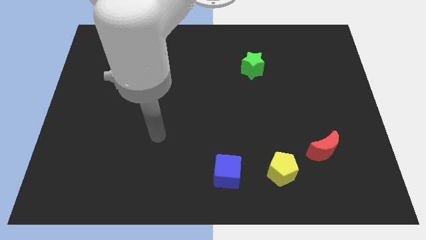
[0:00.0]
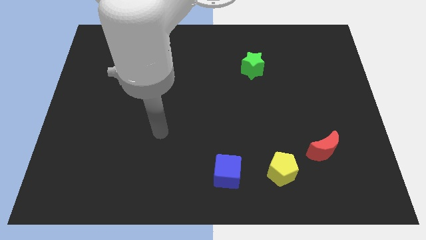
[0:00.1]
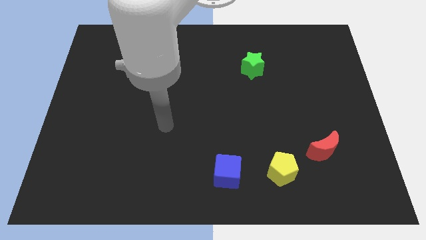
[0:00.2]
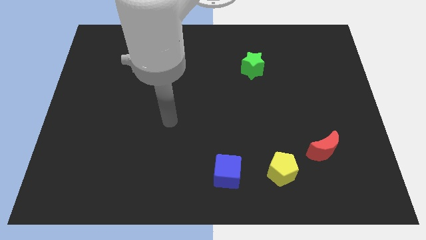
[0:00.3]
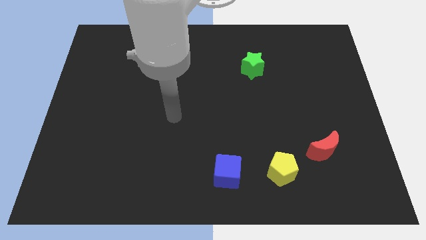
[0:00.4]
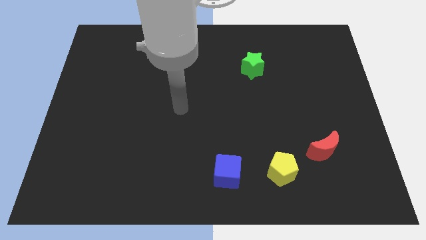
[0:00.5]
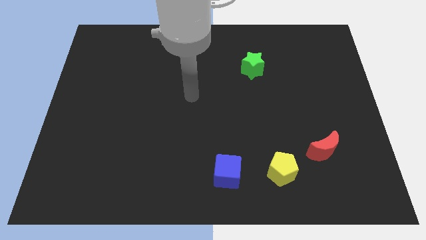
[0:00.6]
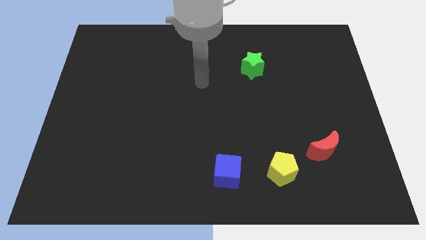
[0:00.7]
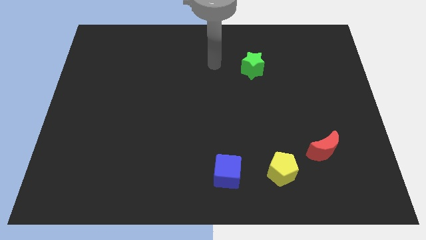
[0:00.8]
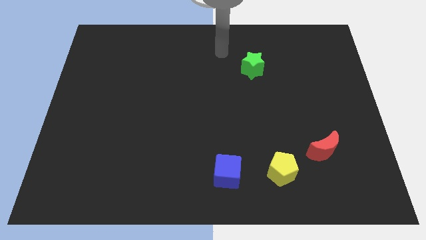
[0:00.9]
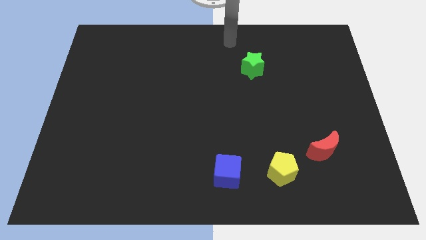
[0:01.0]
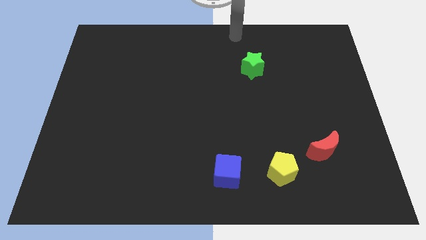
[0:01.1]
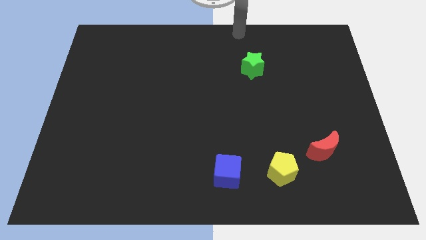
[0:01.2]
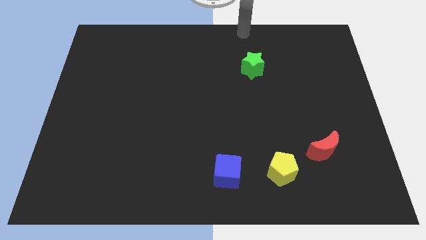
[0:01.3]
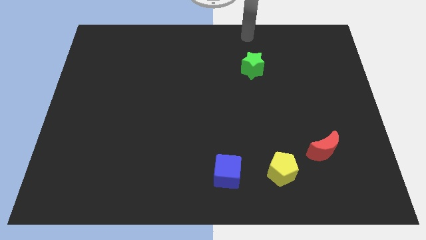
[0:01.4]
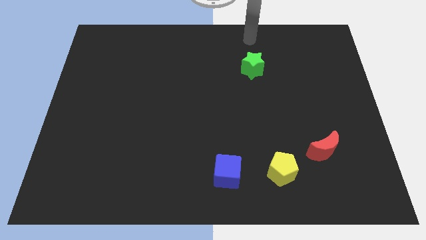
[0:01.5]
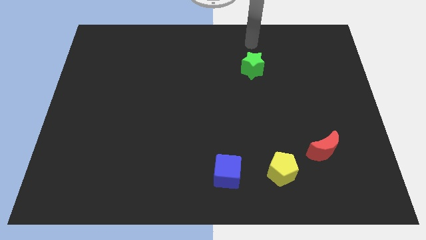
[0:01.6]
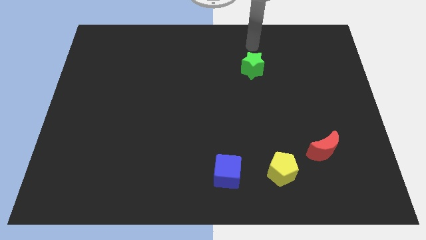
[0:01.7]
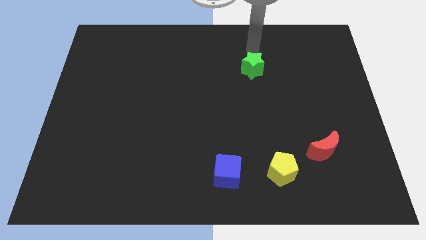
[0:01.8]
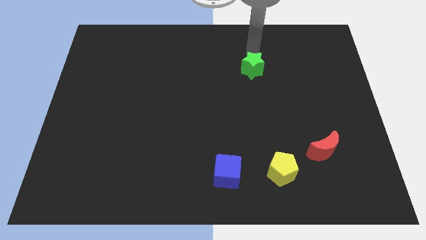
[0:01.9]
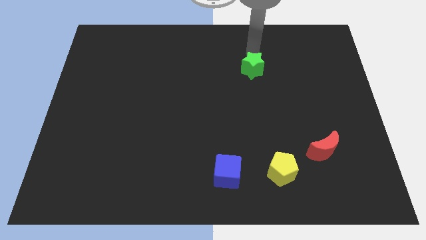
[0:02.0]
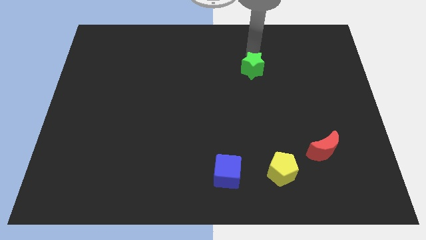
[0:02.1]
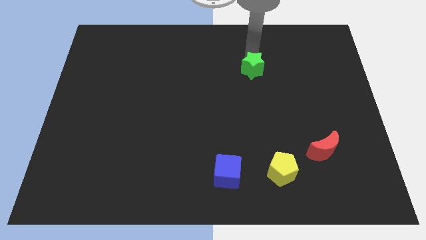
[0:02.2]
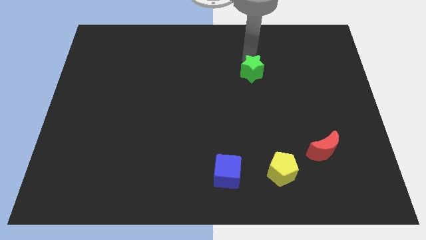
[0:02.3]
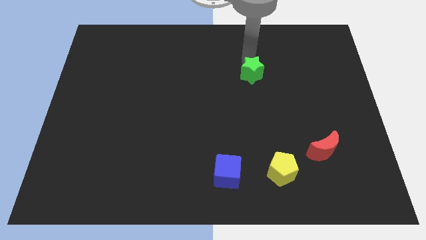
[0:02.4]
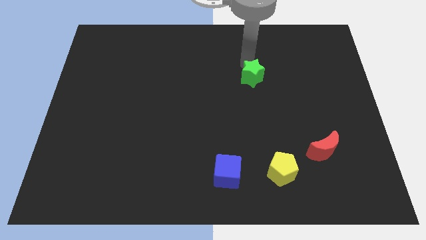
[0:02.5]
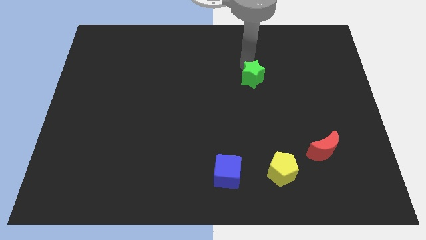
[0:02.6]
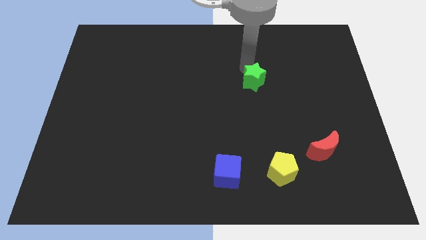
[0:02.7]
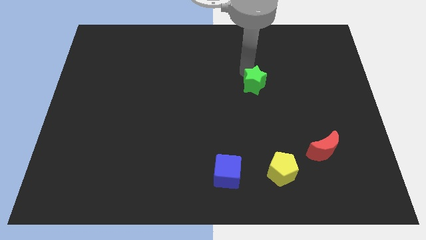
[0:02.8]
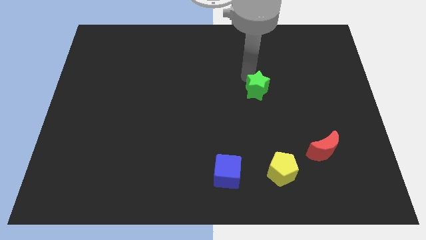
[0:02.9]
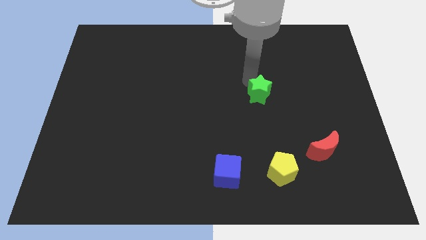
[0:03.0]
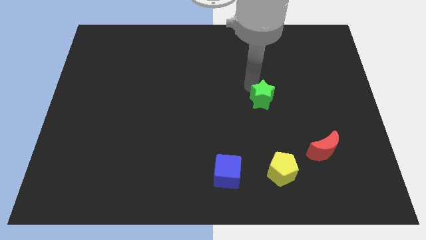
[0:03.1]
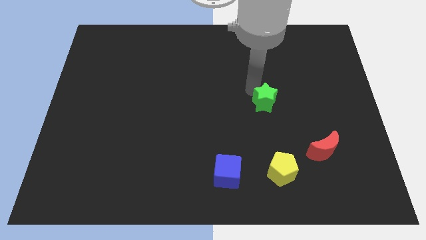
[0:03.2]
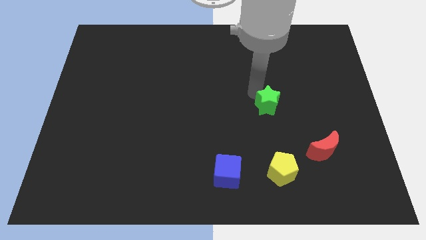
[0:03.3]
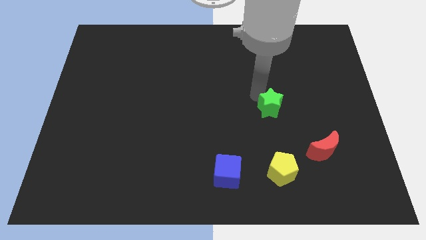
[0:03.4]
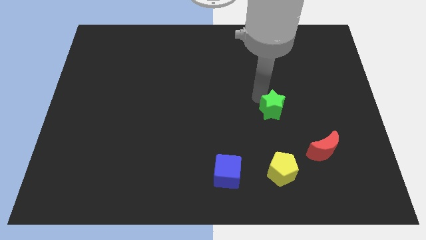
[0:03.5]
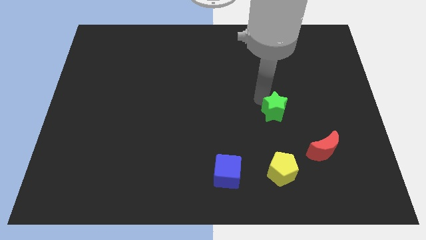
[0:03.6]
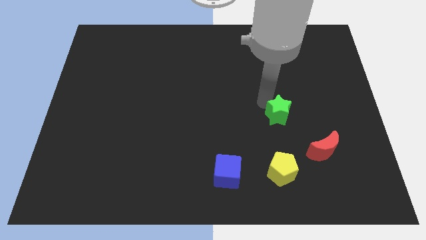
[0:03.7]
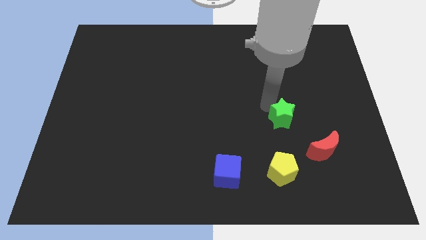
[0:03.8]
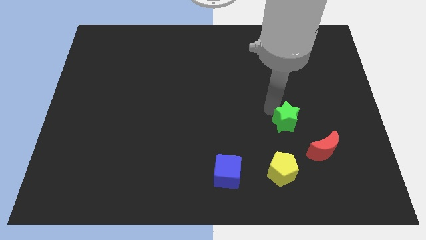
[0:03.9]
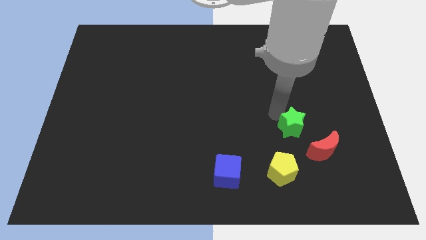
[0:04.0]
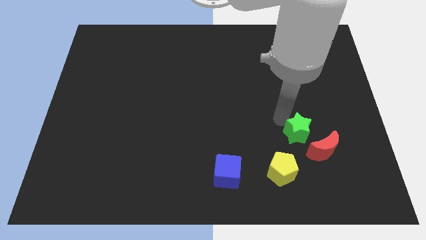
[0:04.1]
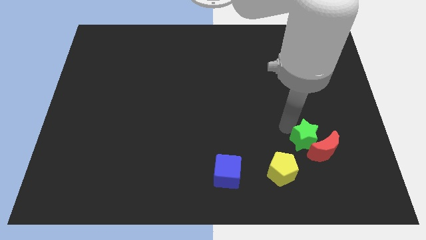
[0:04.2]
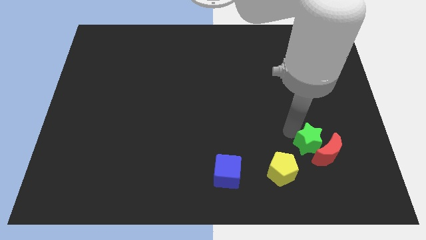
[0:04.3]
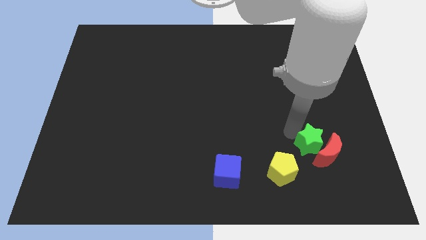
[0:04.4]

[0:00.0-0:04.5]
slide the green block to the red block

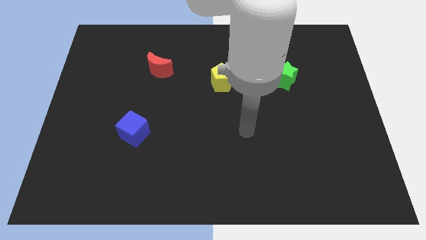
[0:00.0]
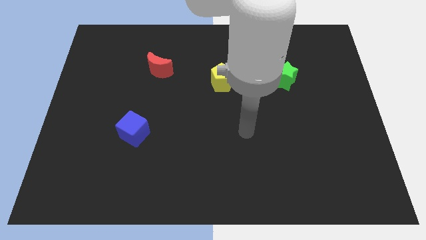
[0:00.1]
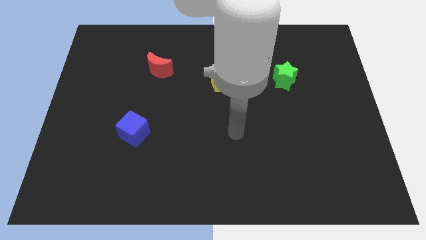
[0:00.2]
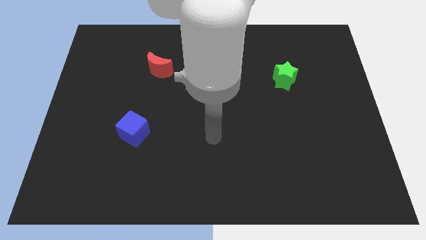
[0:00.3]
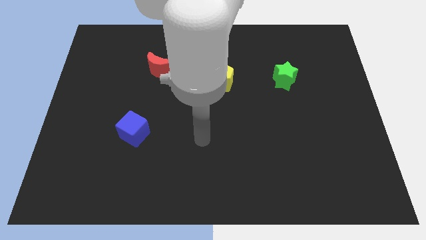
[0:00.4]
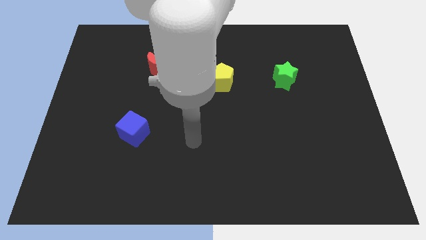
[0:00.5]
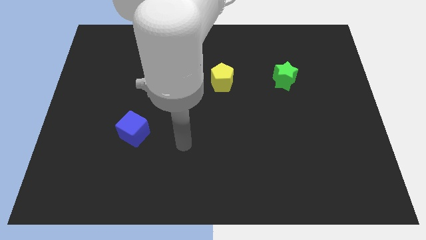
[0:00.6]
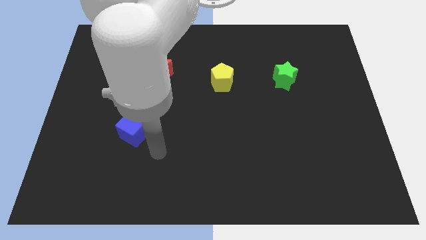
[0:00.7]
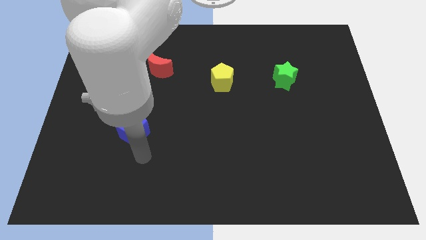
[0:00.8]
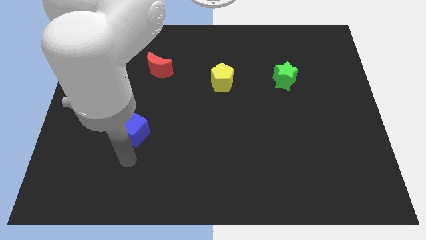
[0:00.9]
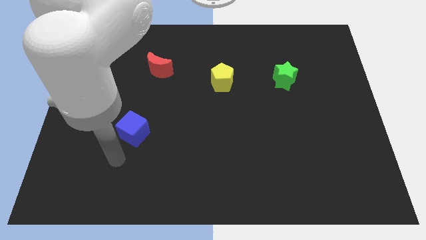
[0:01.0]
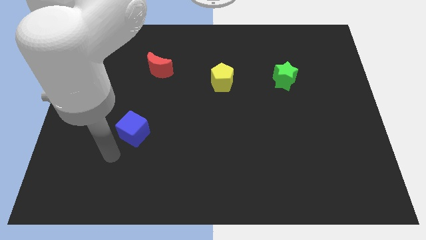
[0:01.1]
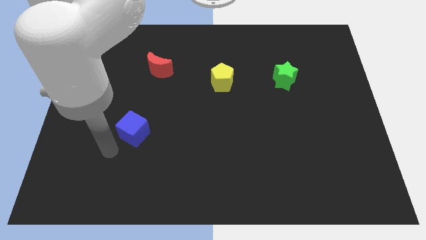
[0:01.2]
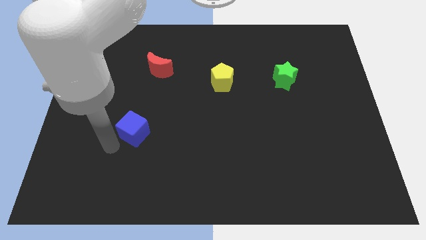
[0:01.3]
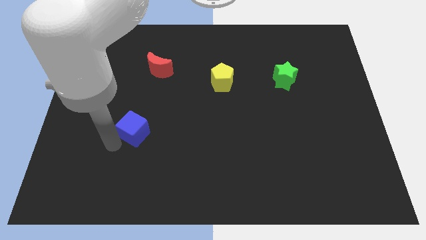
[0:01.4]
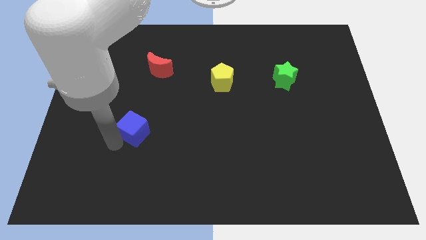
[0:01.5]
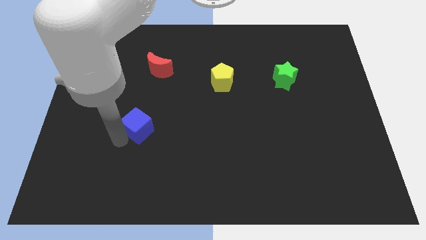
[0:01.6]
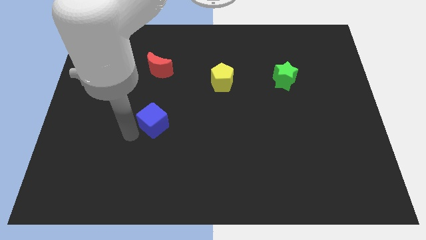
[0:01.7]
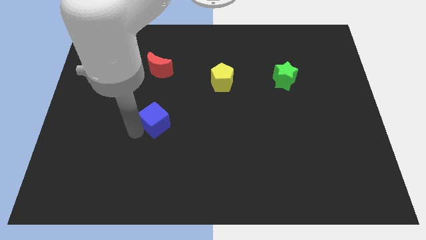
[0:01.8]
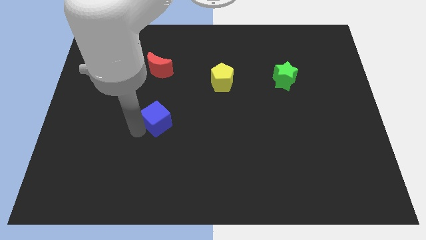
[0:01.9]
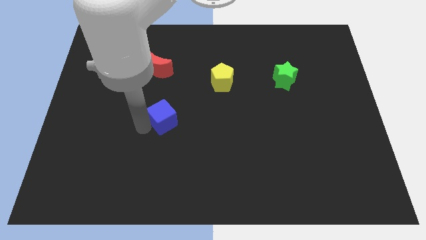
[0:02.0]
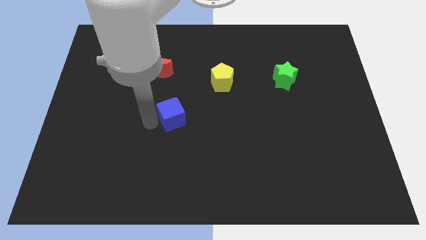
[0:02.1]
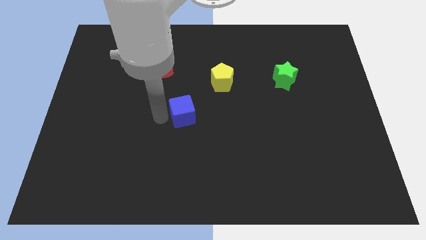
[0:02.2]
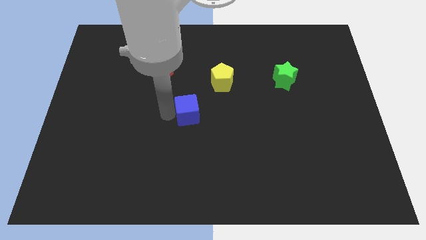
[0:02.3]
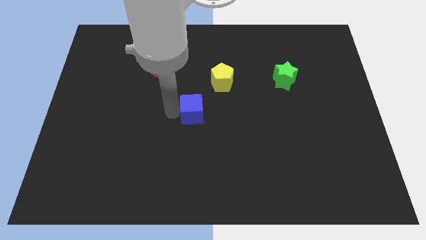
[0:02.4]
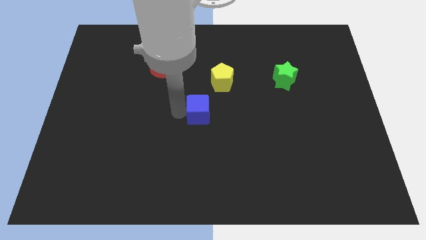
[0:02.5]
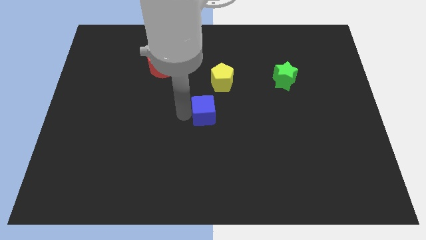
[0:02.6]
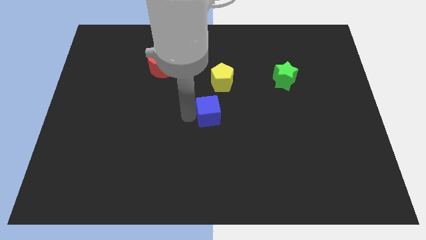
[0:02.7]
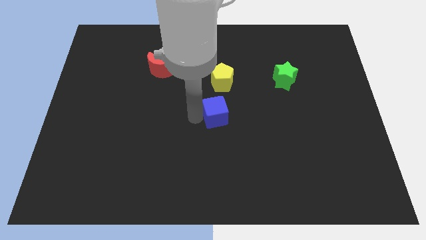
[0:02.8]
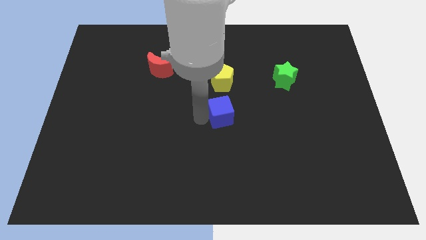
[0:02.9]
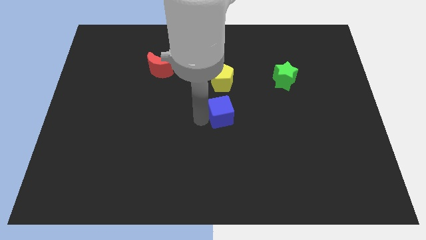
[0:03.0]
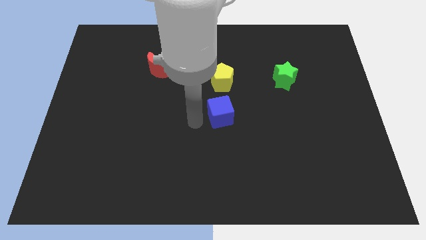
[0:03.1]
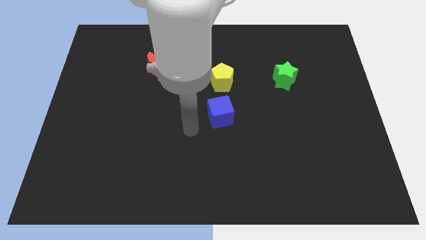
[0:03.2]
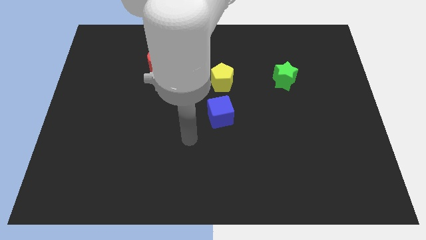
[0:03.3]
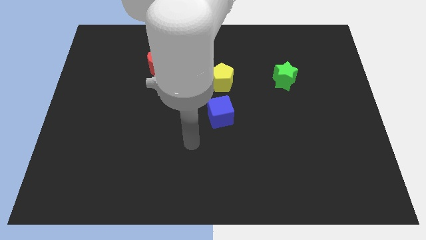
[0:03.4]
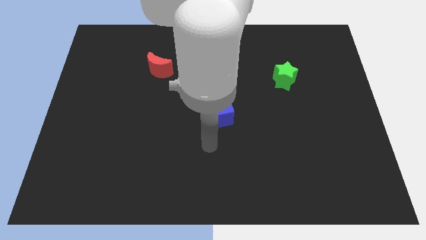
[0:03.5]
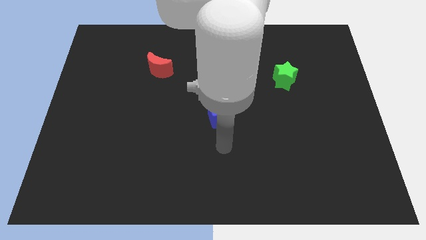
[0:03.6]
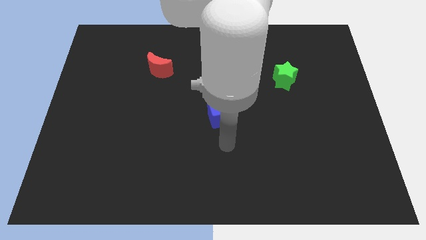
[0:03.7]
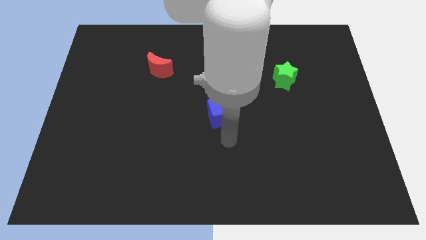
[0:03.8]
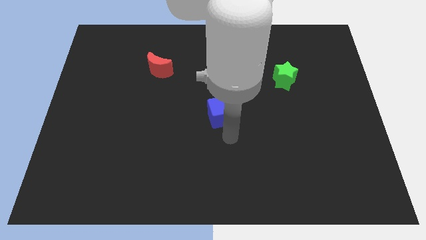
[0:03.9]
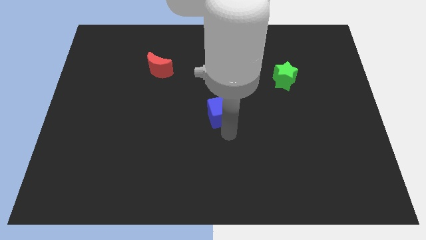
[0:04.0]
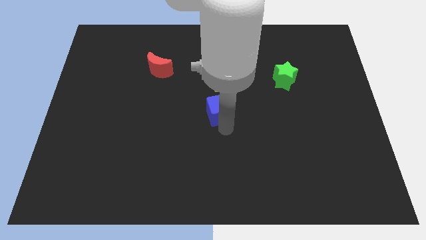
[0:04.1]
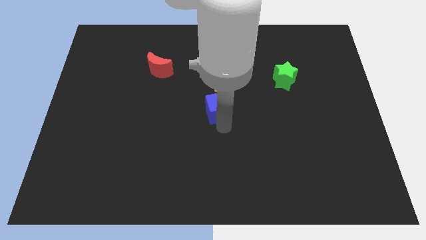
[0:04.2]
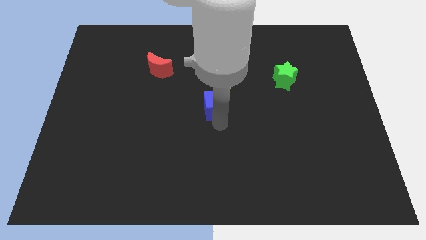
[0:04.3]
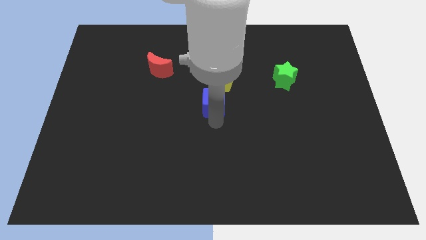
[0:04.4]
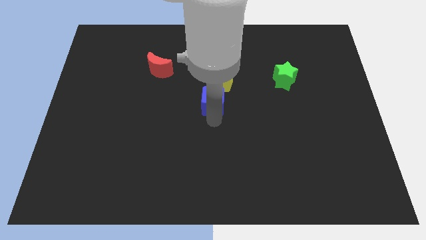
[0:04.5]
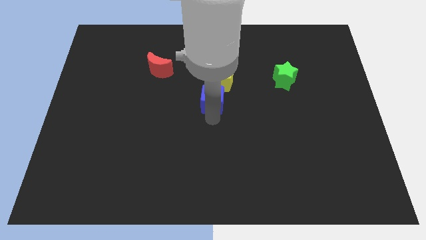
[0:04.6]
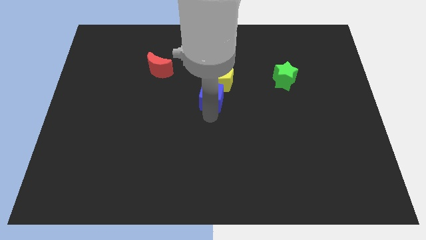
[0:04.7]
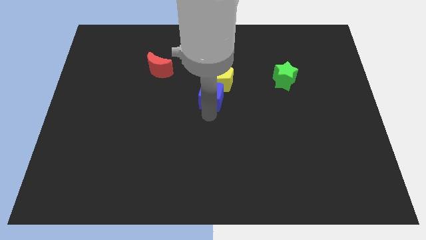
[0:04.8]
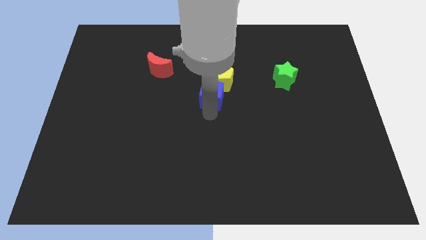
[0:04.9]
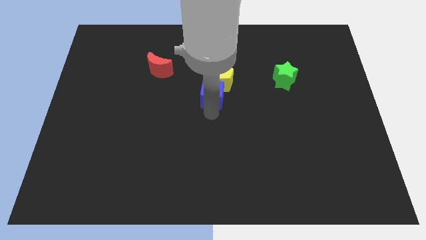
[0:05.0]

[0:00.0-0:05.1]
push the cube next to the pentagon
